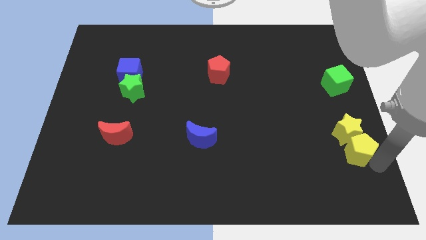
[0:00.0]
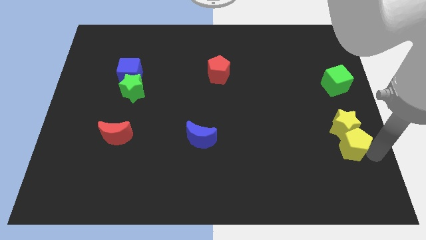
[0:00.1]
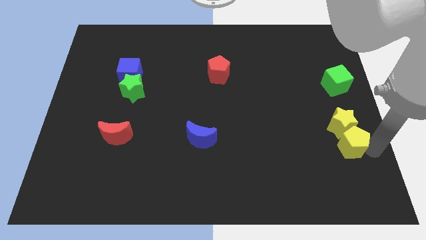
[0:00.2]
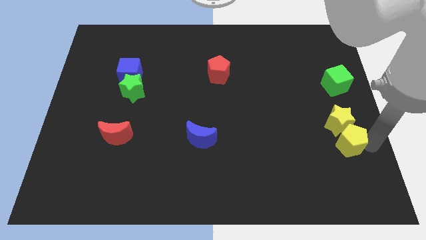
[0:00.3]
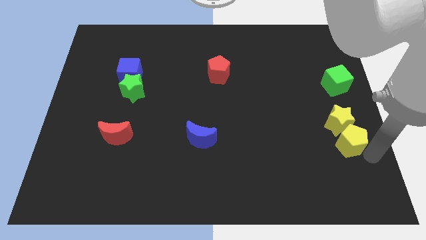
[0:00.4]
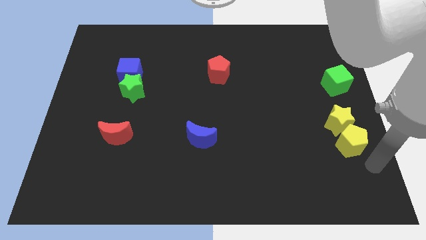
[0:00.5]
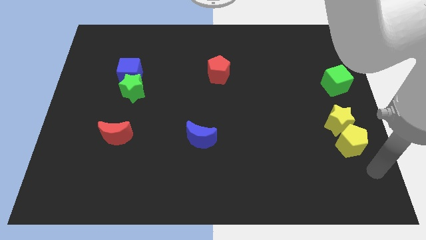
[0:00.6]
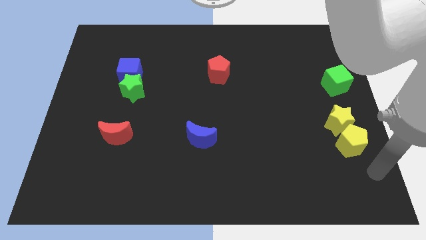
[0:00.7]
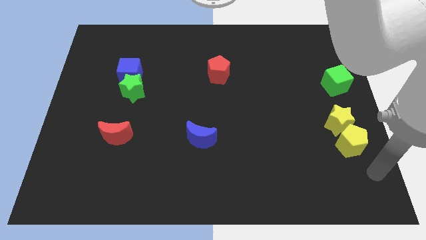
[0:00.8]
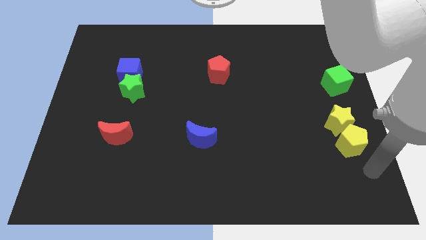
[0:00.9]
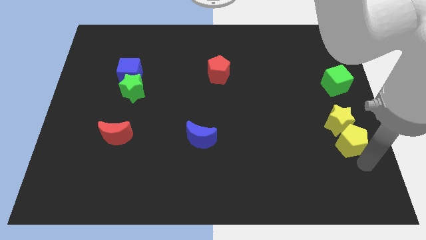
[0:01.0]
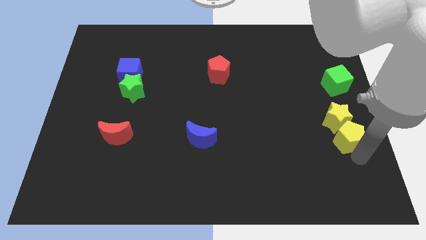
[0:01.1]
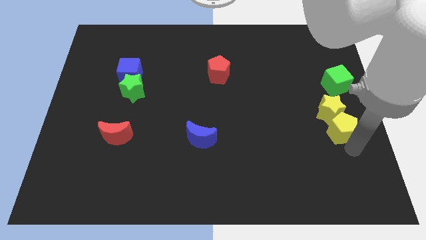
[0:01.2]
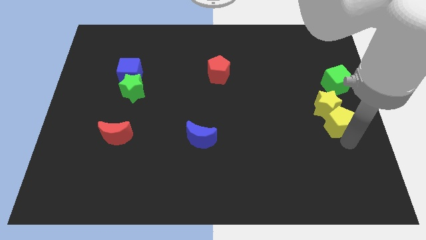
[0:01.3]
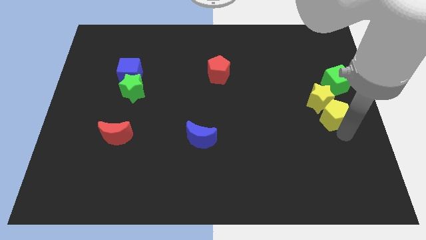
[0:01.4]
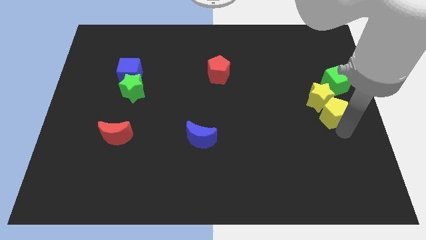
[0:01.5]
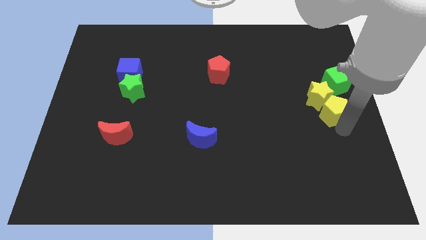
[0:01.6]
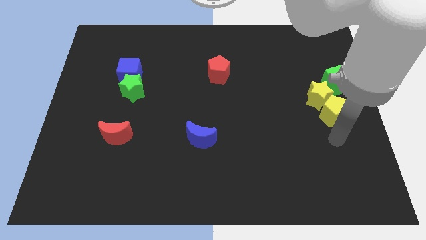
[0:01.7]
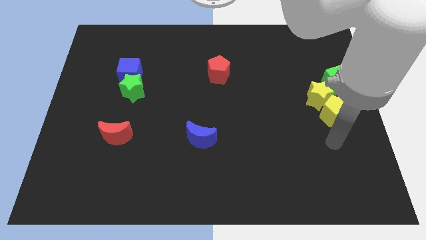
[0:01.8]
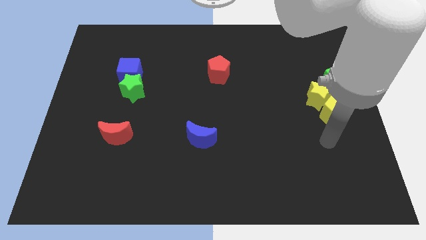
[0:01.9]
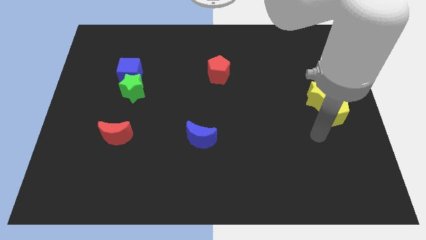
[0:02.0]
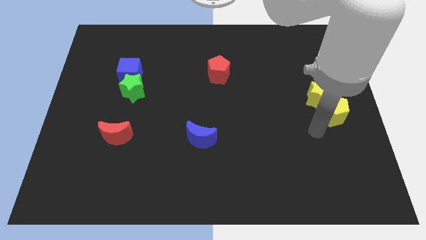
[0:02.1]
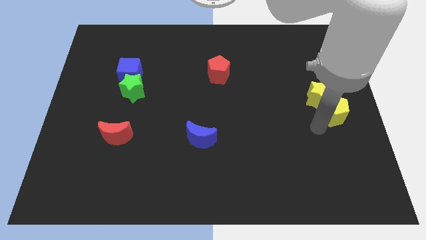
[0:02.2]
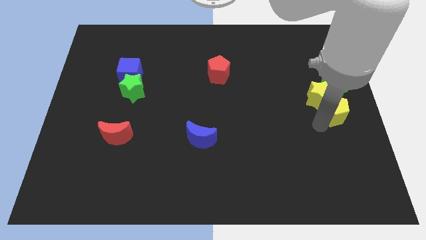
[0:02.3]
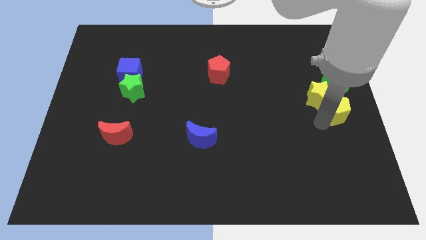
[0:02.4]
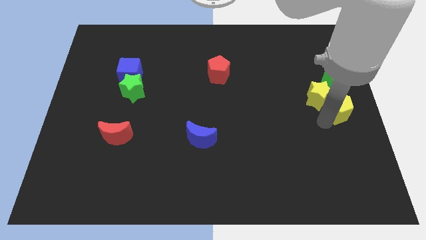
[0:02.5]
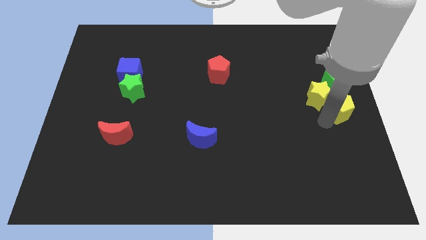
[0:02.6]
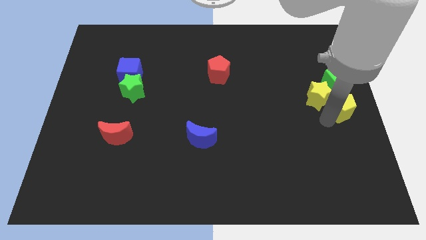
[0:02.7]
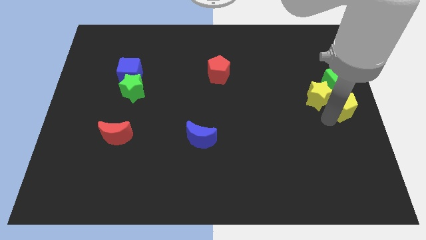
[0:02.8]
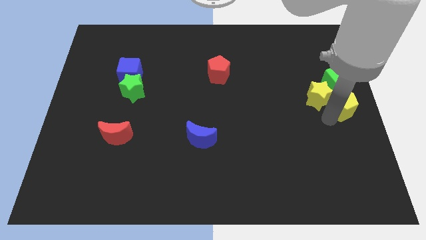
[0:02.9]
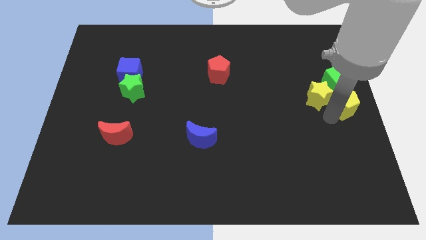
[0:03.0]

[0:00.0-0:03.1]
move yellow pentagon below green cube

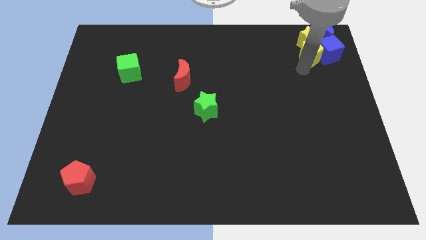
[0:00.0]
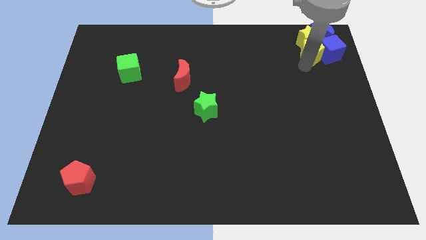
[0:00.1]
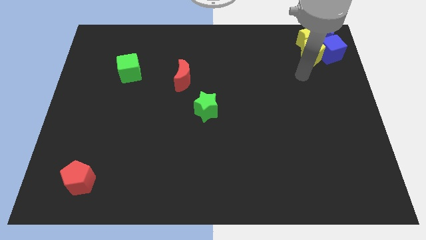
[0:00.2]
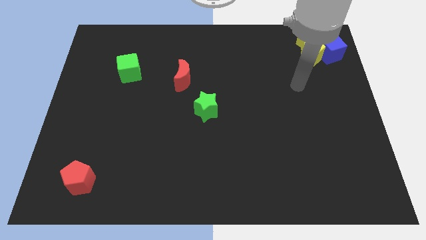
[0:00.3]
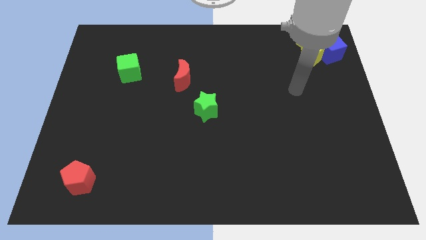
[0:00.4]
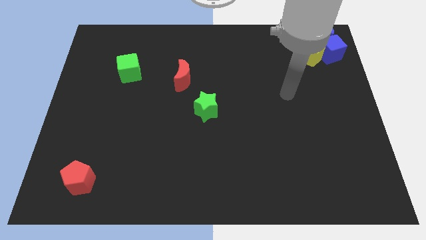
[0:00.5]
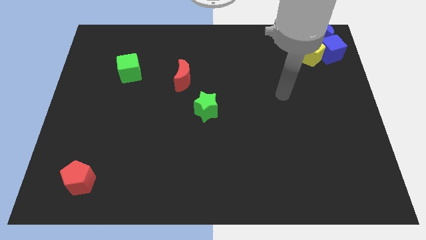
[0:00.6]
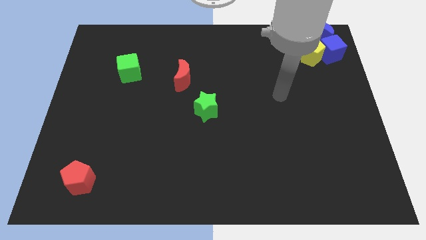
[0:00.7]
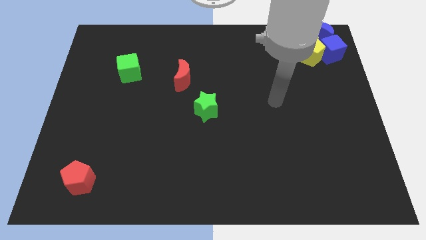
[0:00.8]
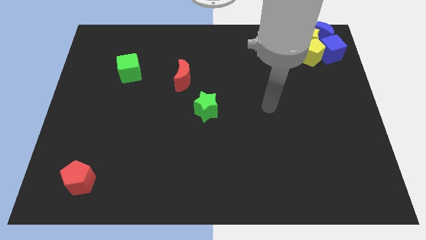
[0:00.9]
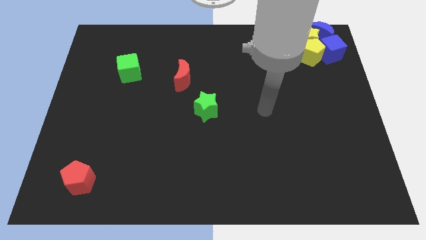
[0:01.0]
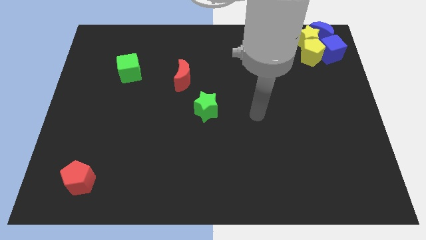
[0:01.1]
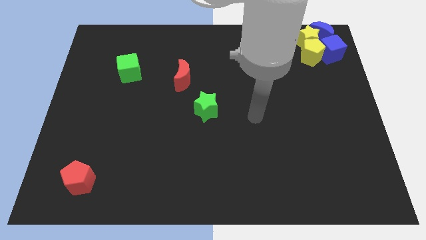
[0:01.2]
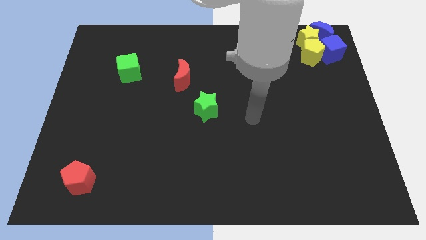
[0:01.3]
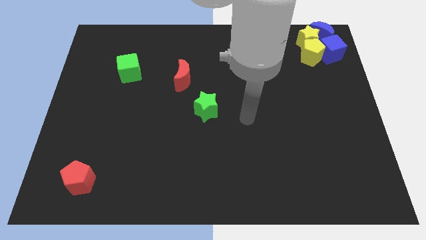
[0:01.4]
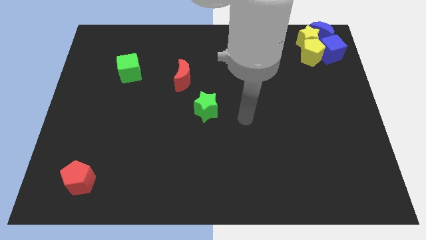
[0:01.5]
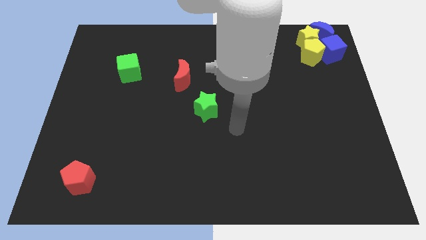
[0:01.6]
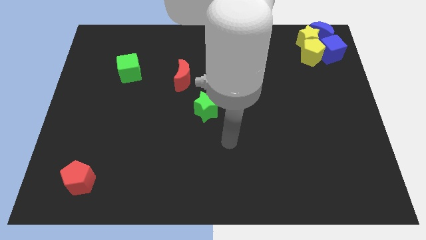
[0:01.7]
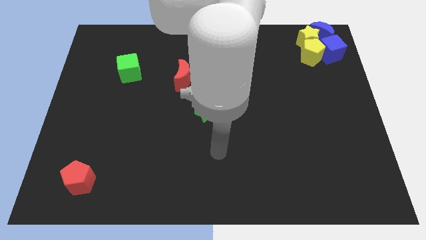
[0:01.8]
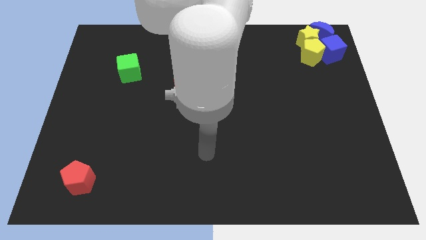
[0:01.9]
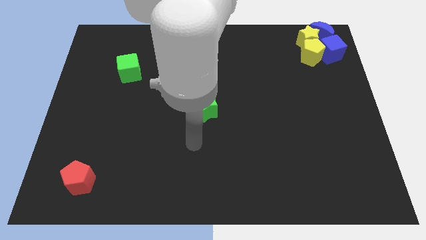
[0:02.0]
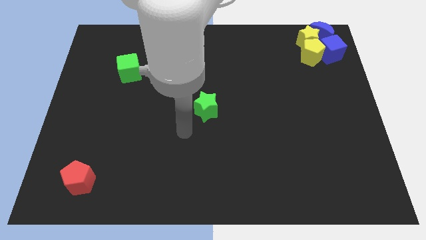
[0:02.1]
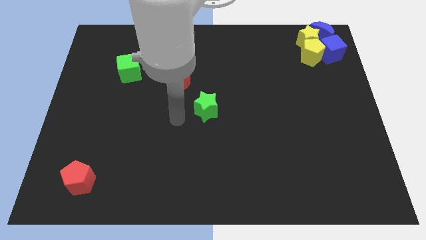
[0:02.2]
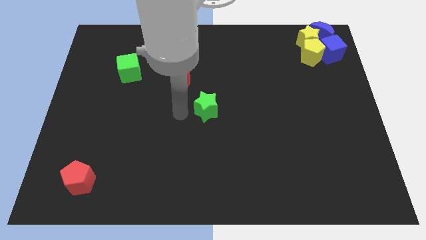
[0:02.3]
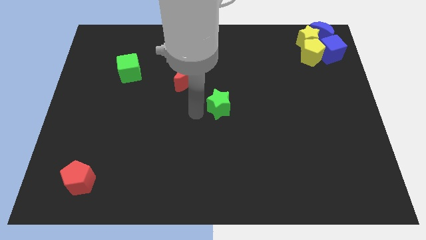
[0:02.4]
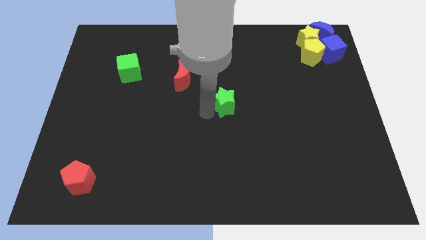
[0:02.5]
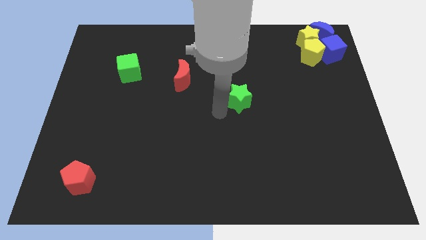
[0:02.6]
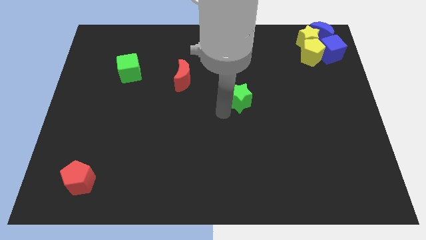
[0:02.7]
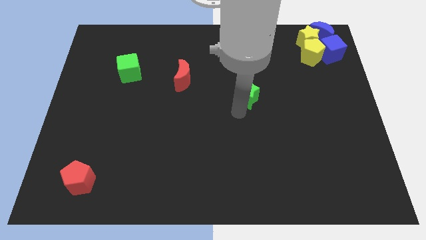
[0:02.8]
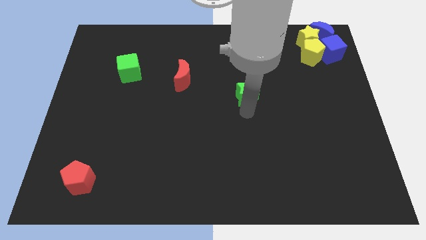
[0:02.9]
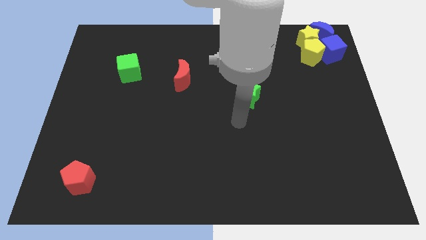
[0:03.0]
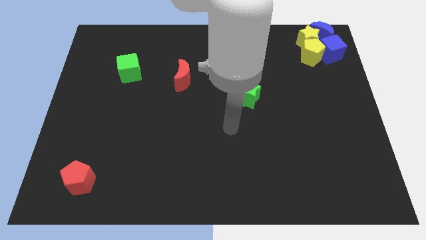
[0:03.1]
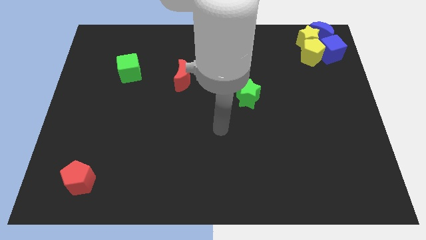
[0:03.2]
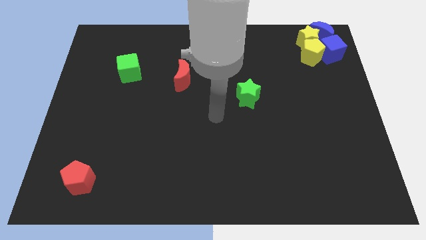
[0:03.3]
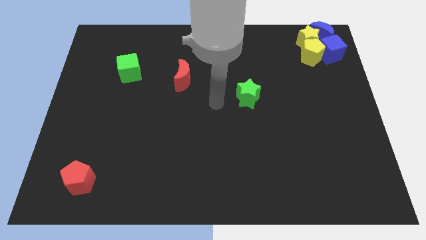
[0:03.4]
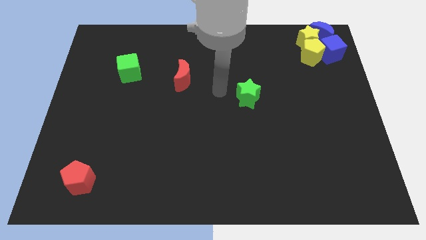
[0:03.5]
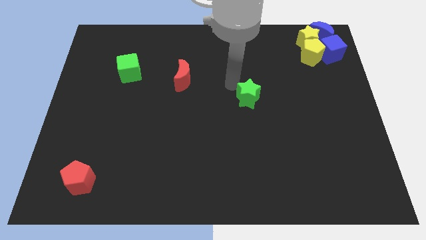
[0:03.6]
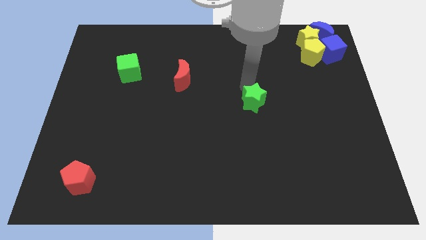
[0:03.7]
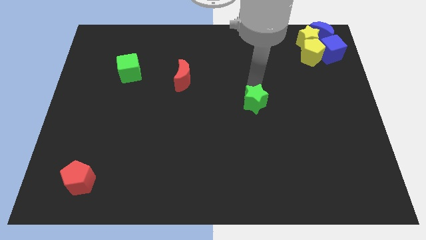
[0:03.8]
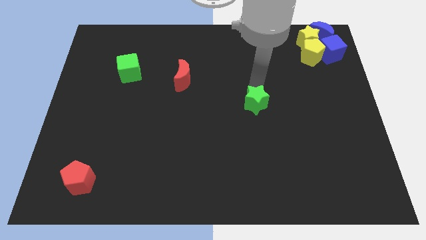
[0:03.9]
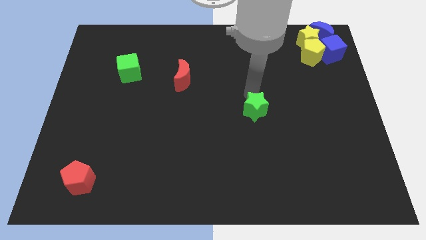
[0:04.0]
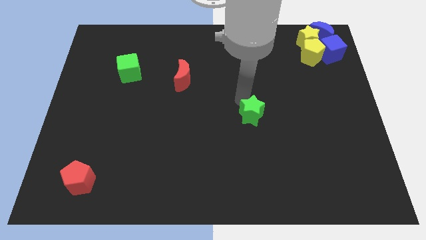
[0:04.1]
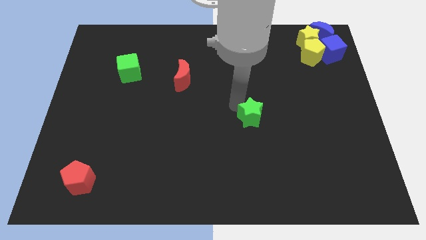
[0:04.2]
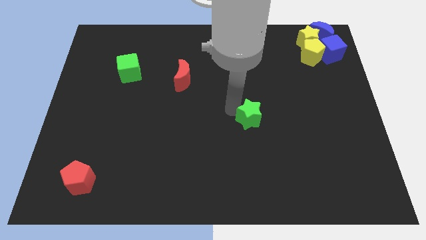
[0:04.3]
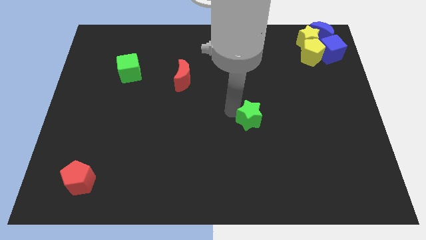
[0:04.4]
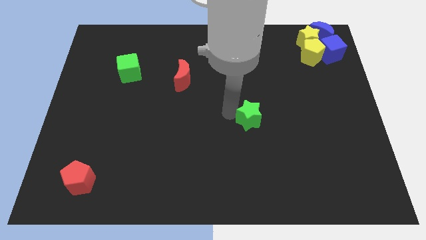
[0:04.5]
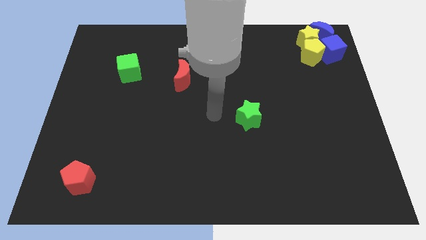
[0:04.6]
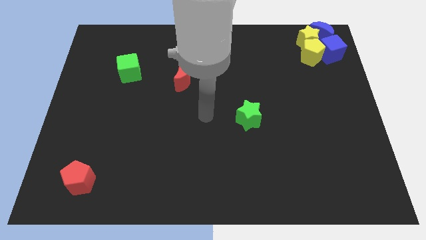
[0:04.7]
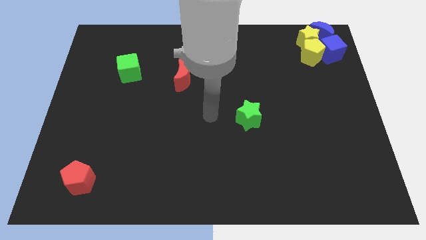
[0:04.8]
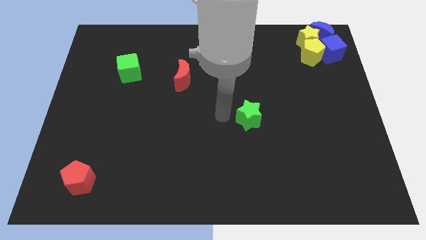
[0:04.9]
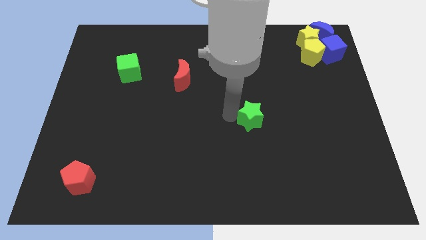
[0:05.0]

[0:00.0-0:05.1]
push the green star to the right side of the board

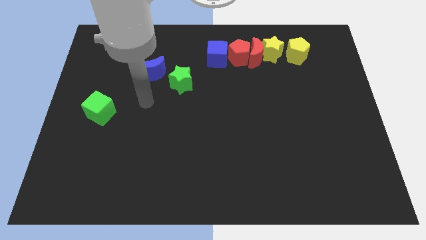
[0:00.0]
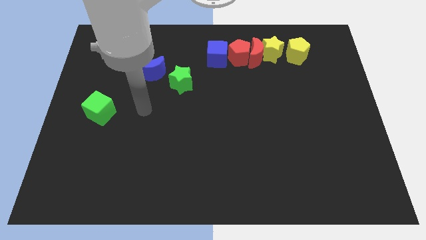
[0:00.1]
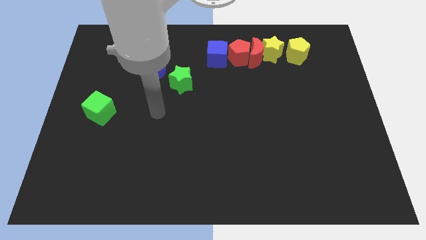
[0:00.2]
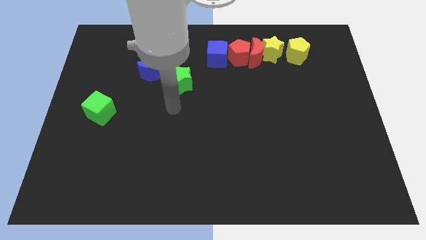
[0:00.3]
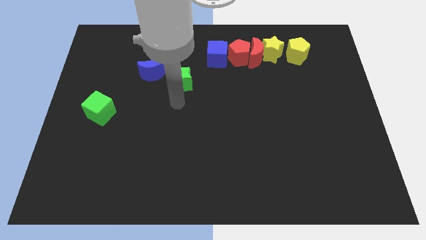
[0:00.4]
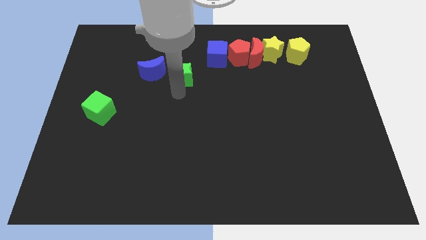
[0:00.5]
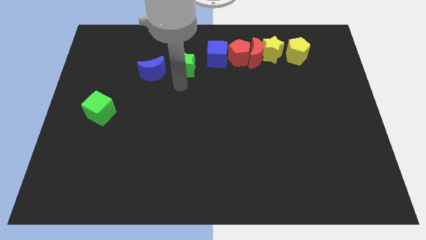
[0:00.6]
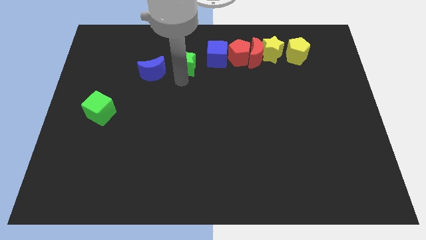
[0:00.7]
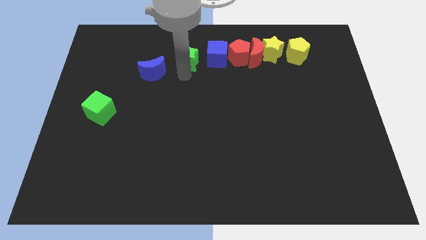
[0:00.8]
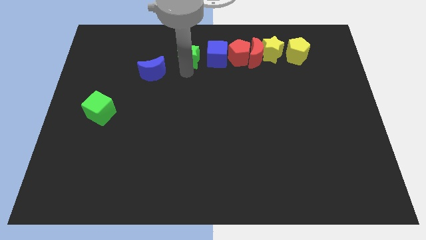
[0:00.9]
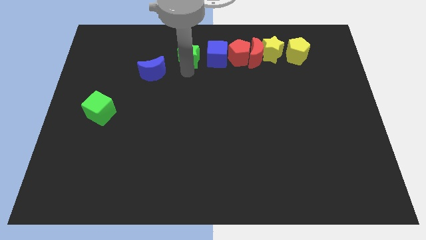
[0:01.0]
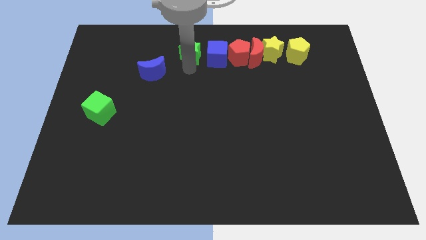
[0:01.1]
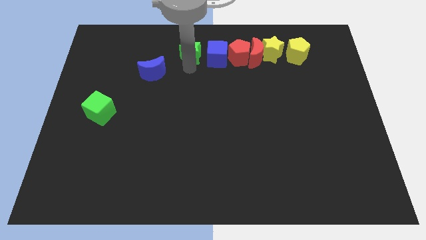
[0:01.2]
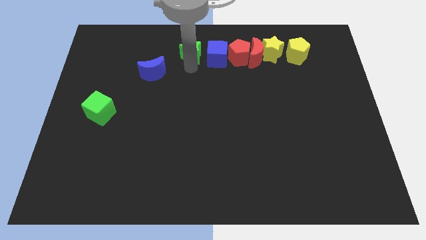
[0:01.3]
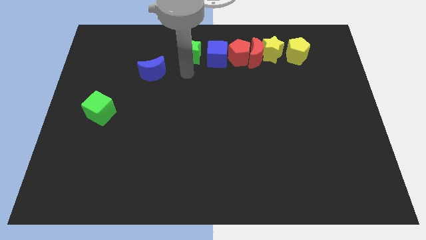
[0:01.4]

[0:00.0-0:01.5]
push the green star at the left side of the blue cube
